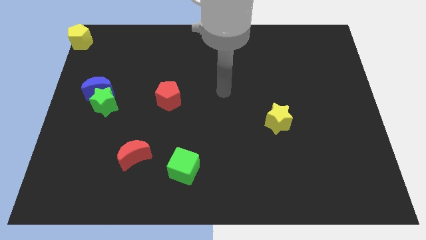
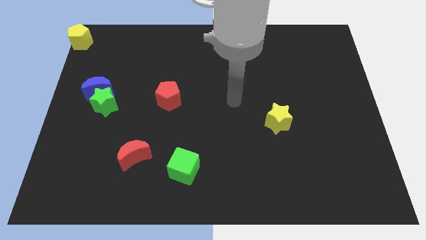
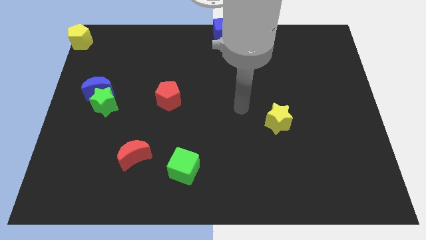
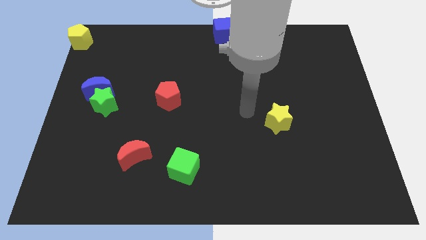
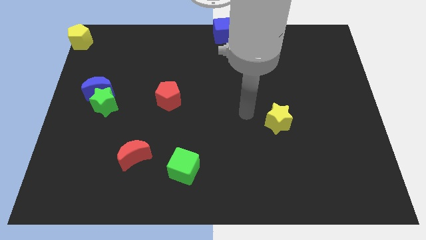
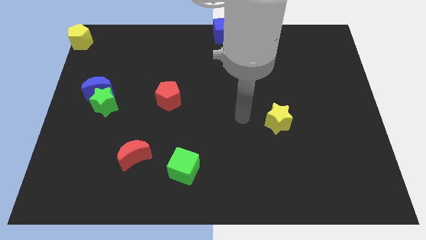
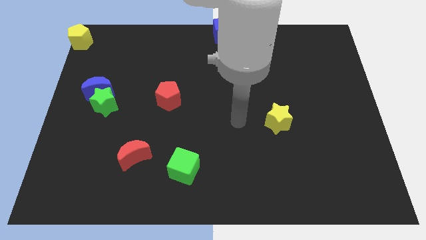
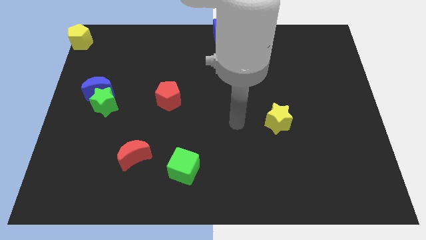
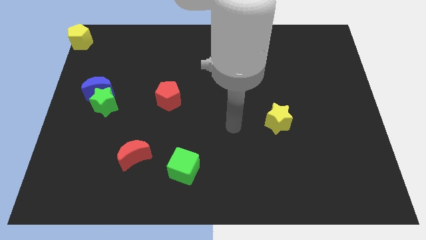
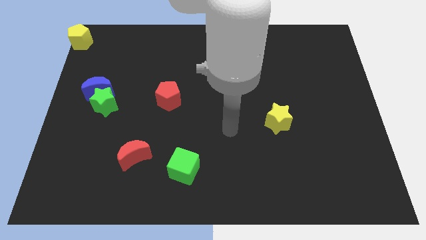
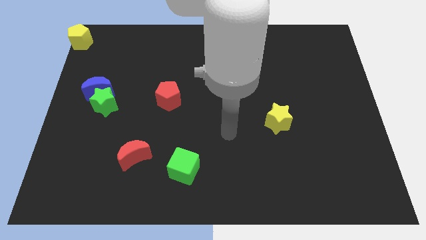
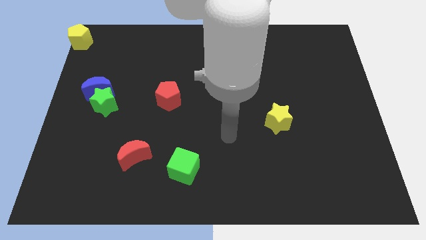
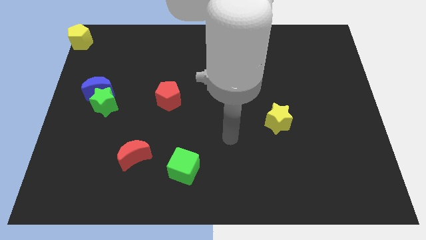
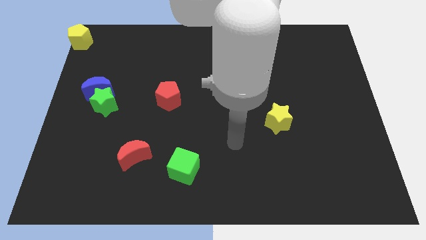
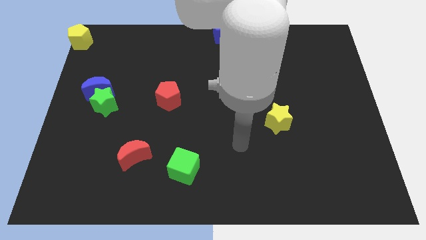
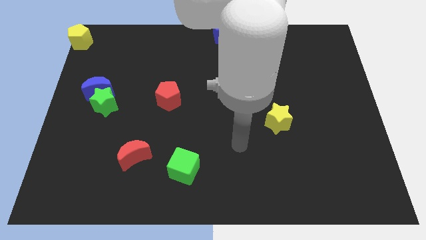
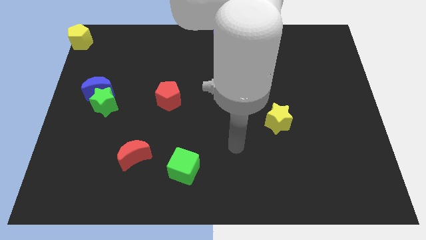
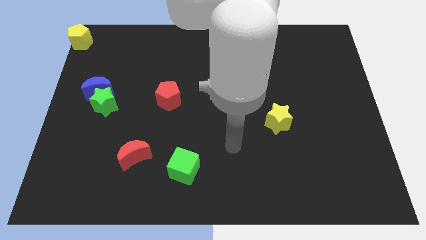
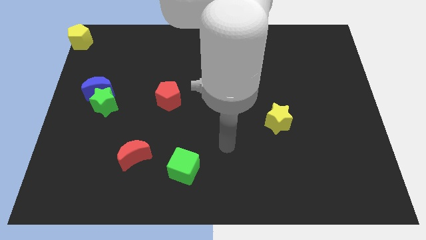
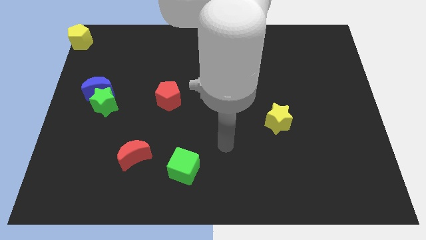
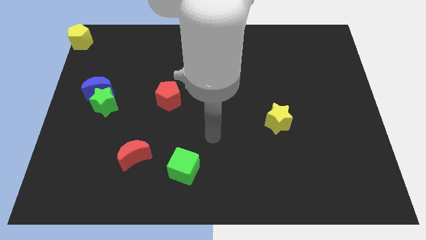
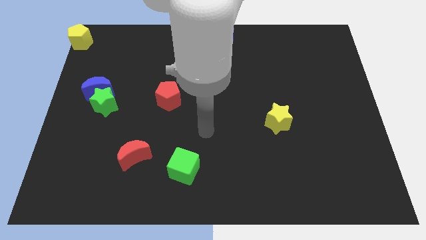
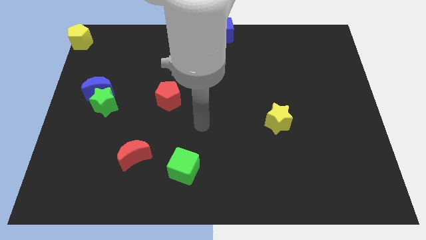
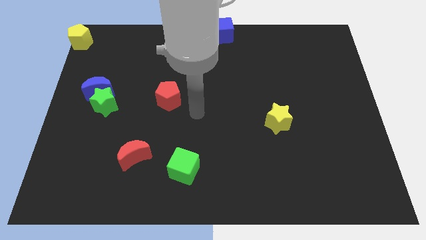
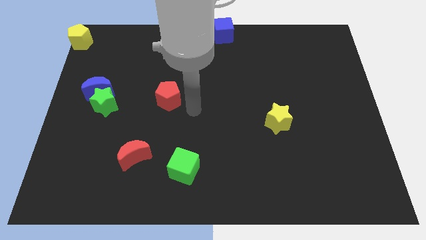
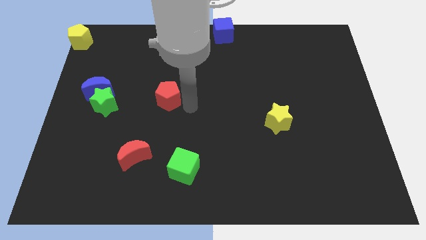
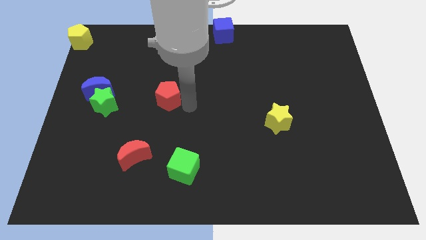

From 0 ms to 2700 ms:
place your arm at the right of the red pentagon

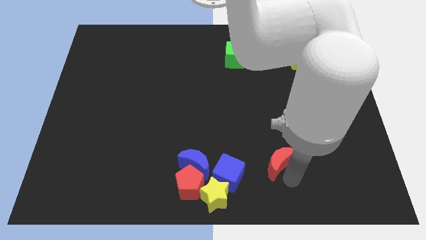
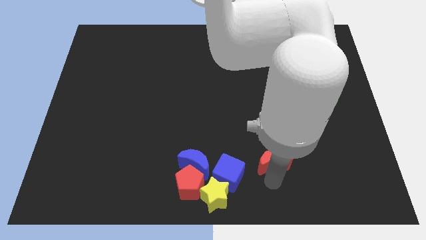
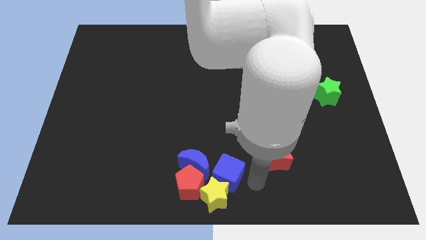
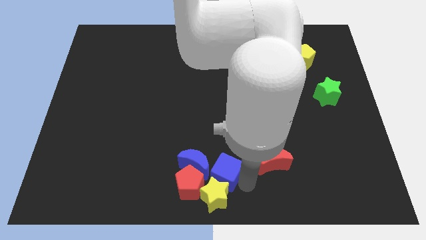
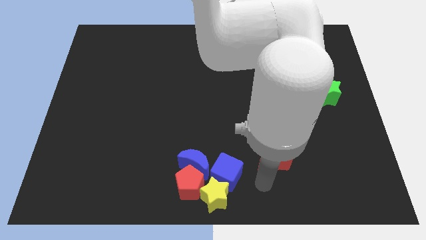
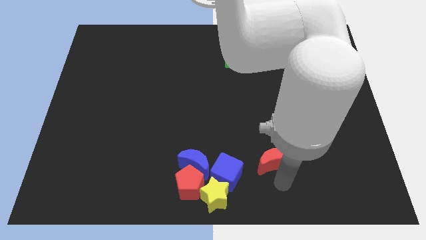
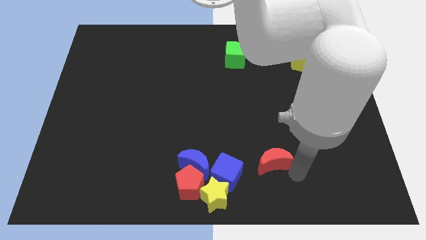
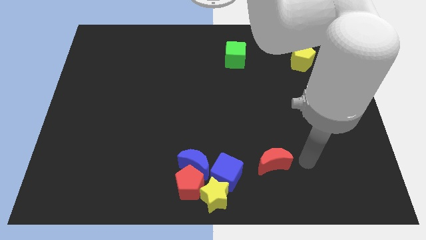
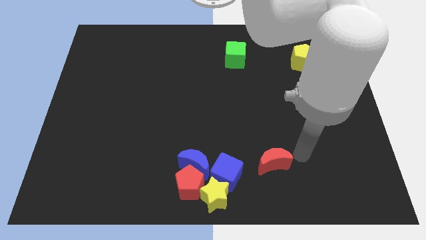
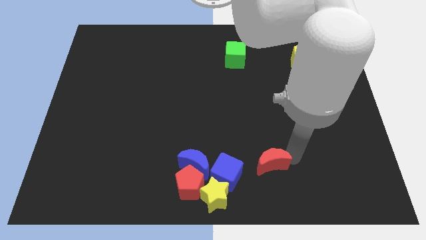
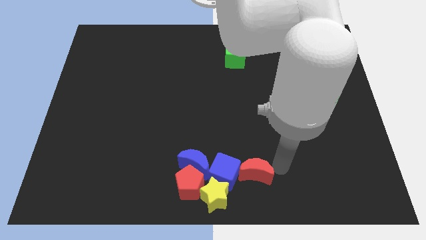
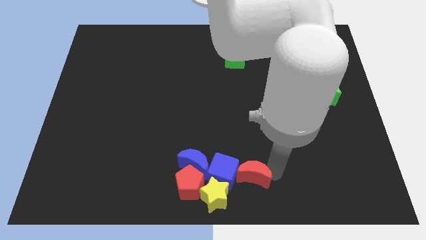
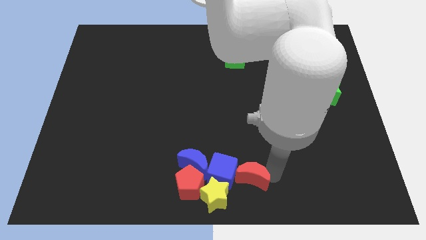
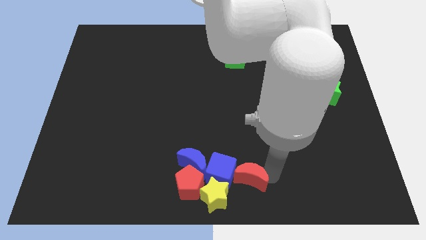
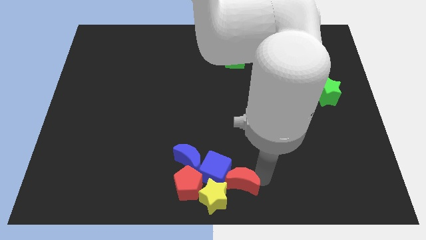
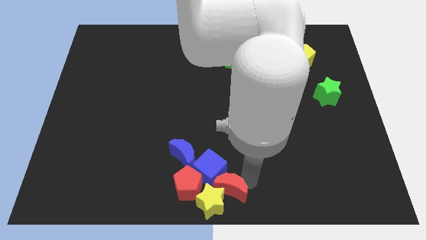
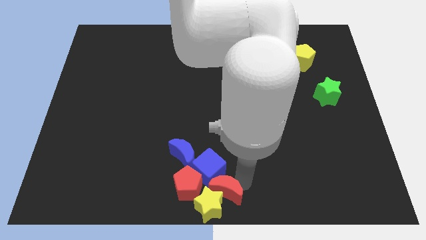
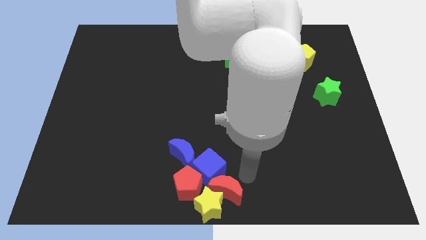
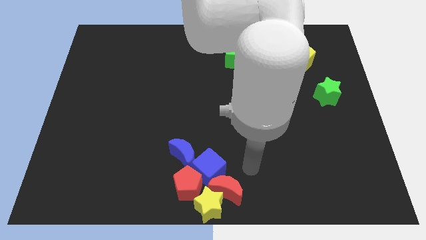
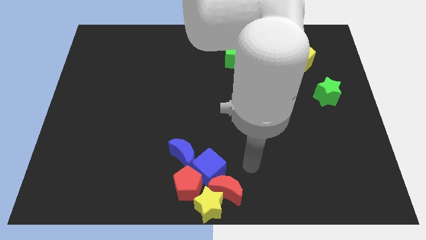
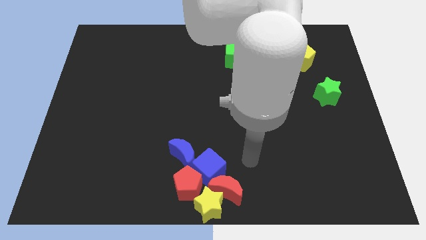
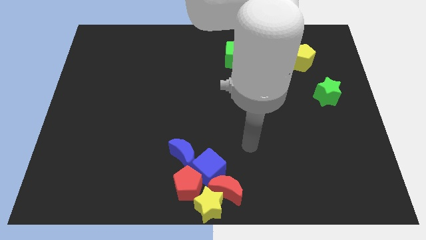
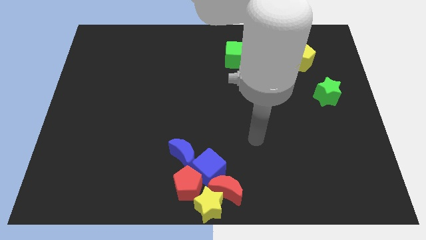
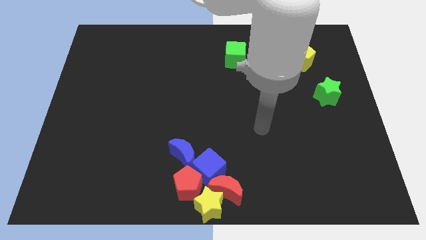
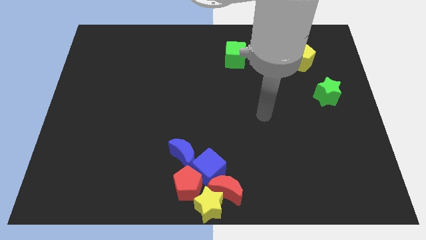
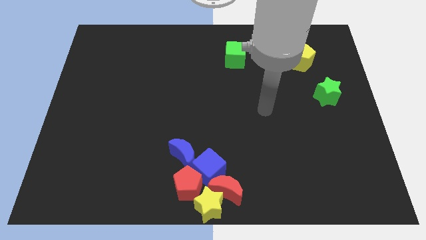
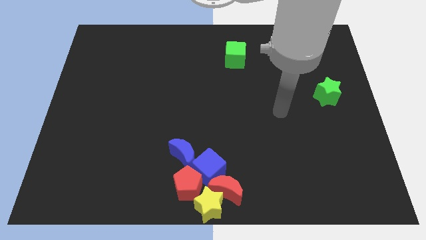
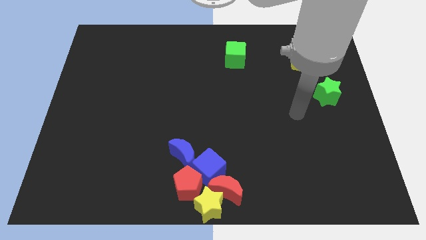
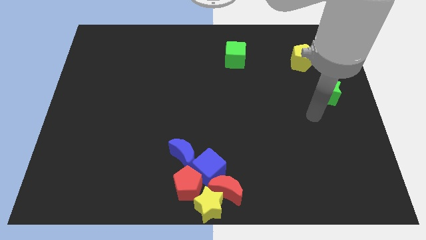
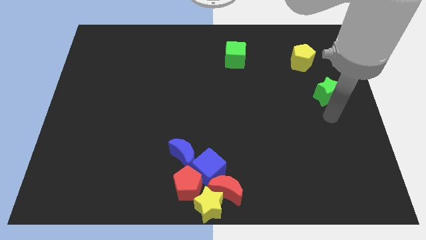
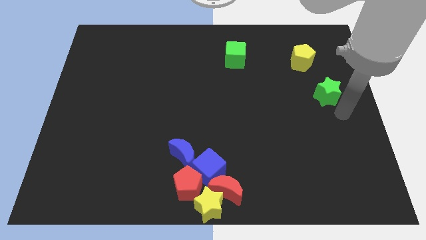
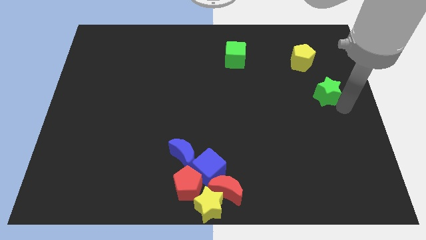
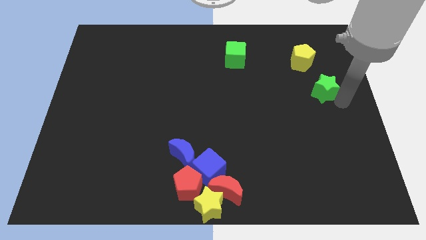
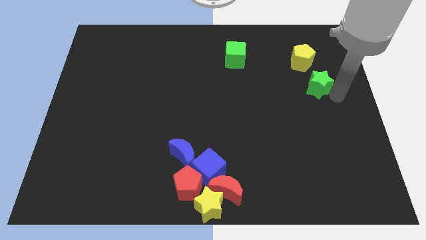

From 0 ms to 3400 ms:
push the red crescent into the yellow star

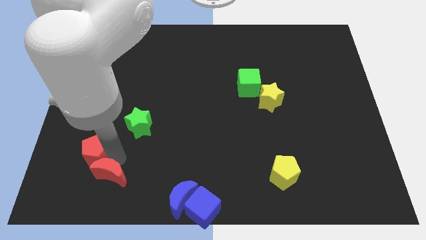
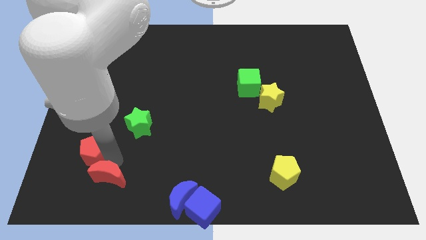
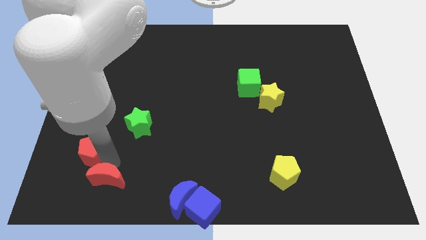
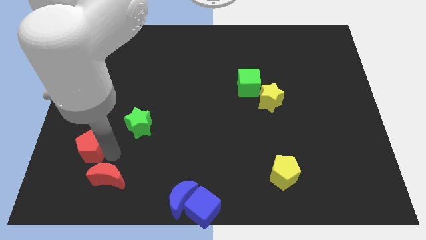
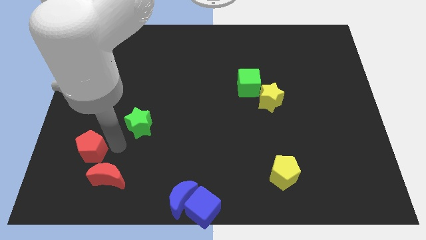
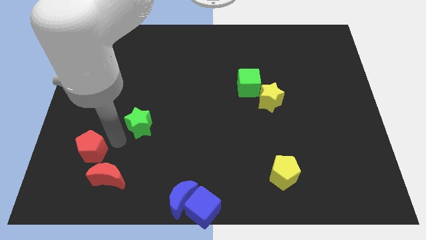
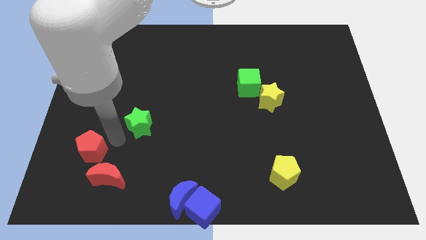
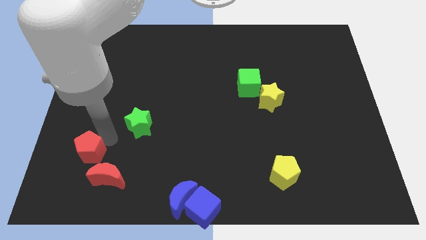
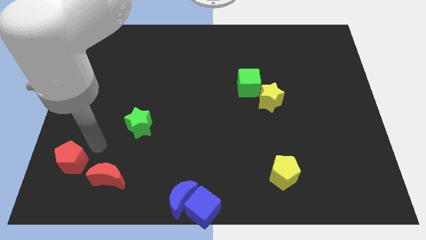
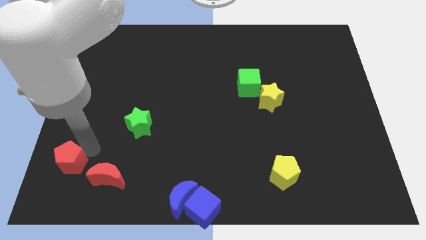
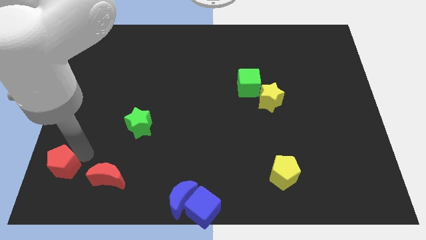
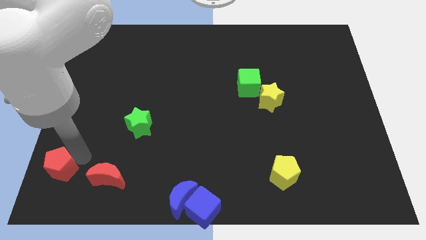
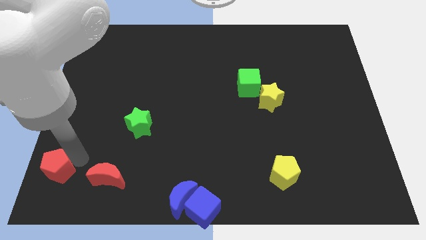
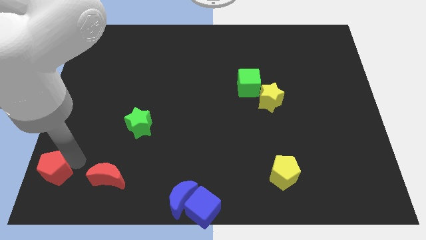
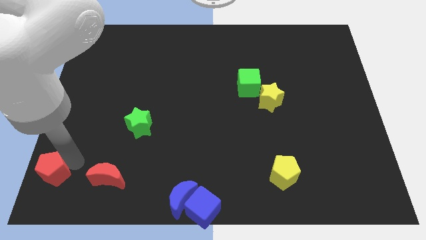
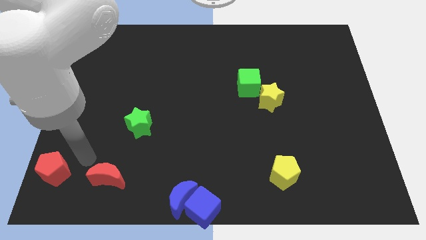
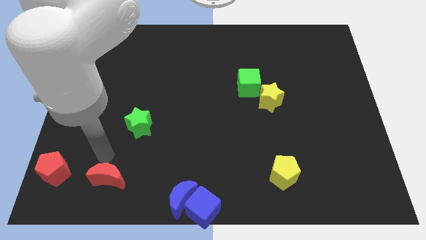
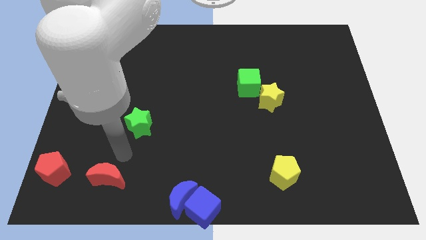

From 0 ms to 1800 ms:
place the red pentagon towards the left side of the board

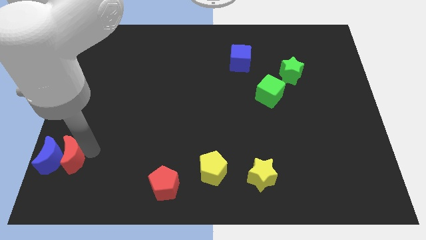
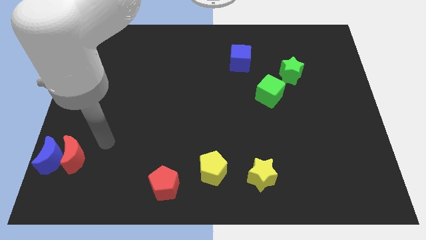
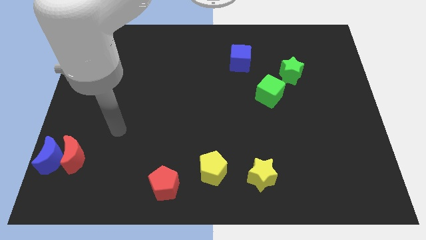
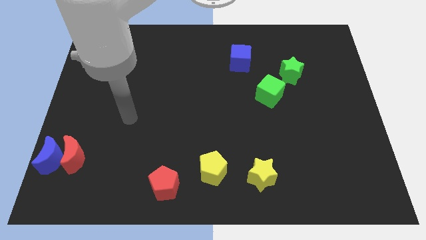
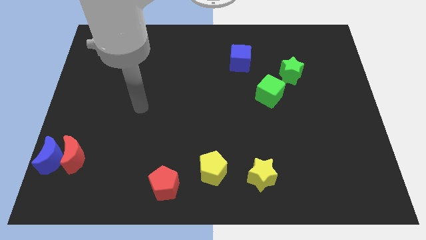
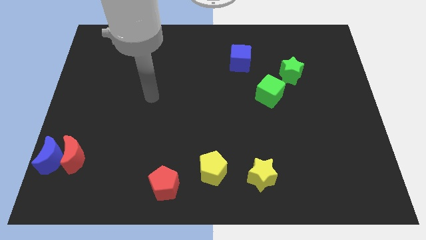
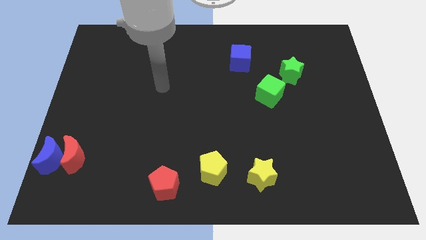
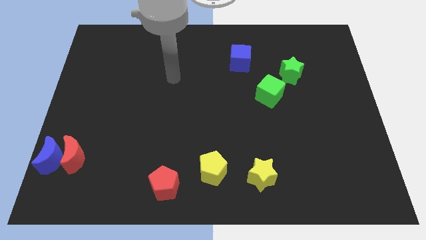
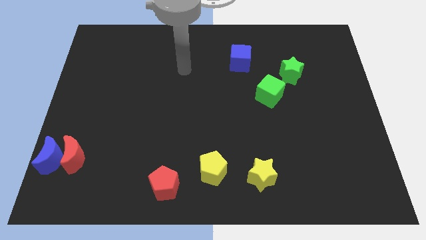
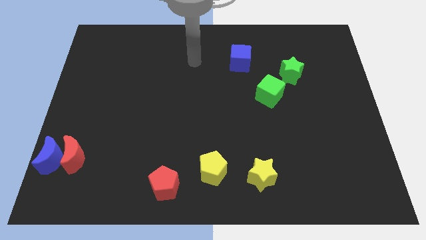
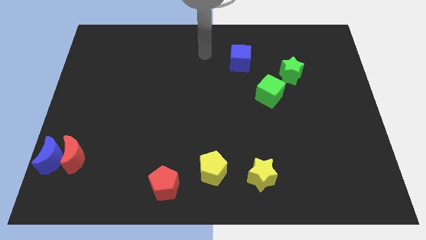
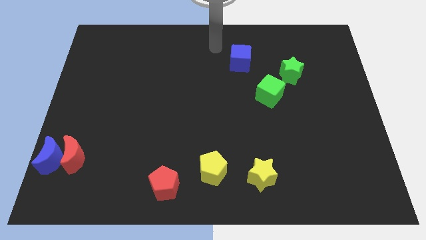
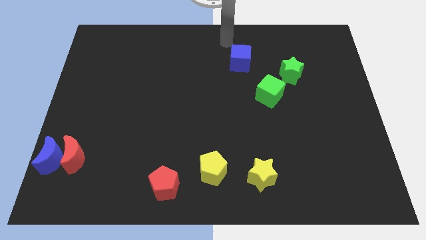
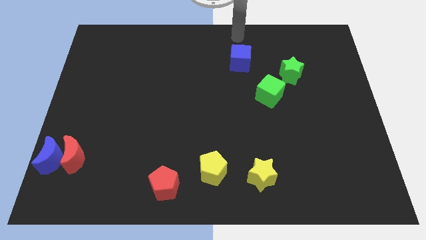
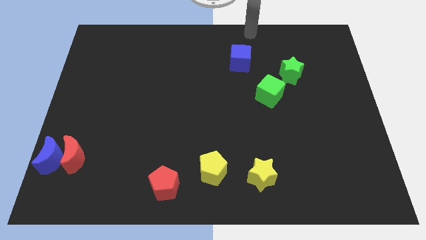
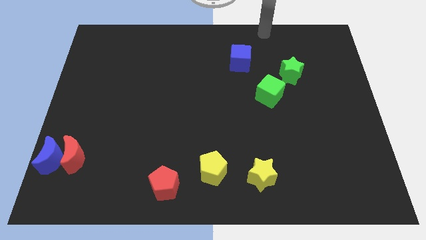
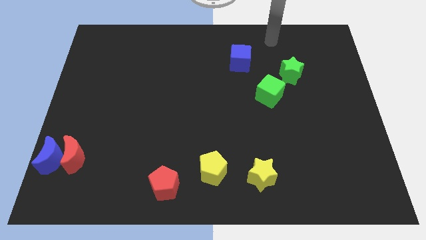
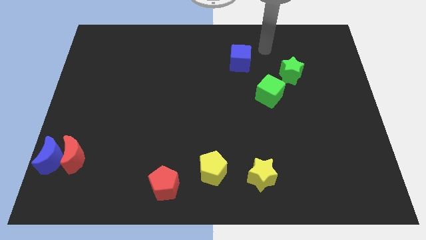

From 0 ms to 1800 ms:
move the arm away from the red moon
